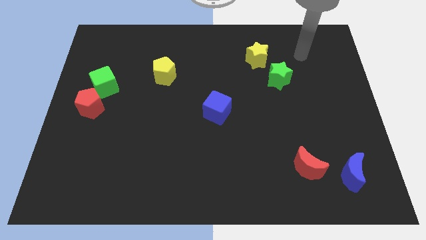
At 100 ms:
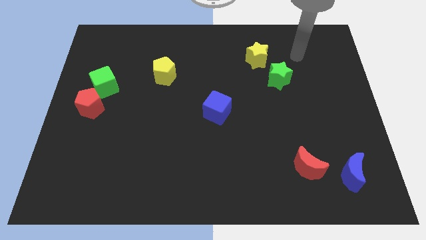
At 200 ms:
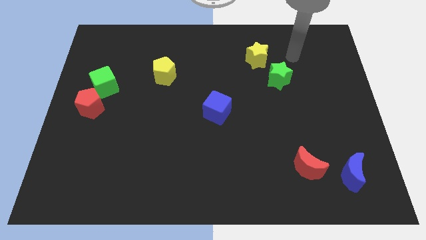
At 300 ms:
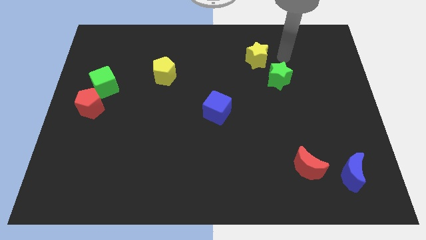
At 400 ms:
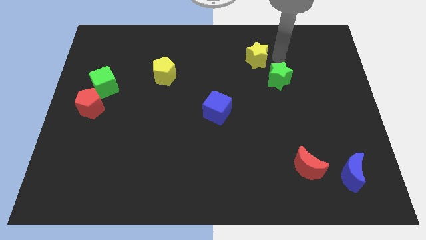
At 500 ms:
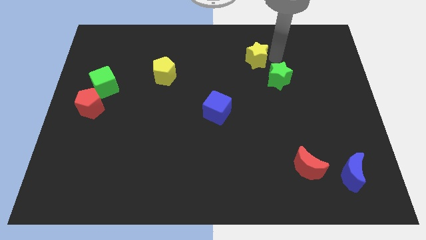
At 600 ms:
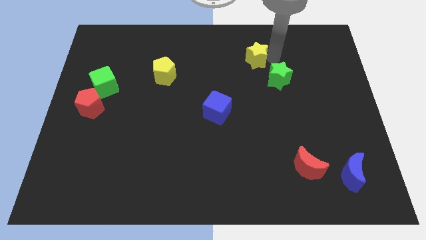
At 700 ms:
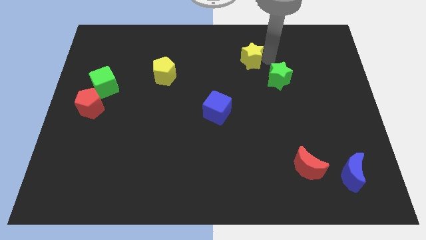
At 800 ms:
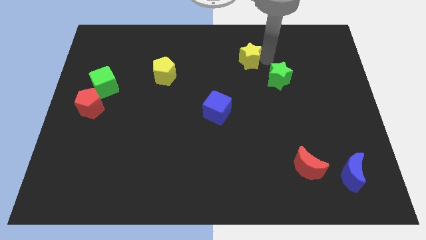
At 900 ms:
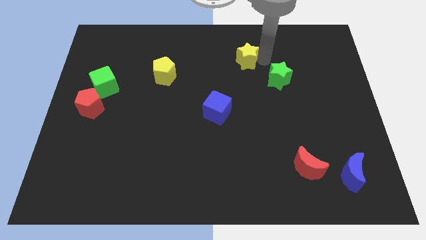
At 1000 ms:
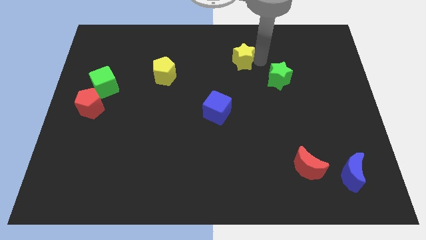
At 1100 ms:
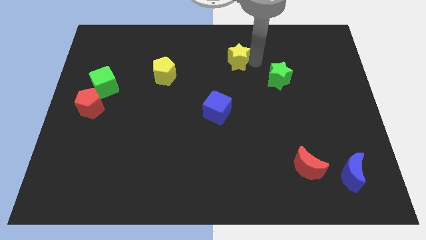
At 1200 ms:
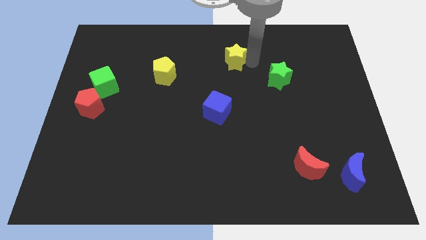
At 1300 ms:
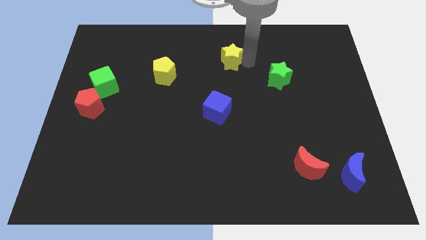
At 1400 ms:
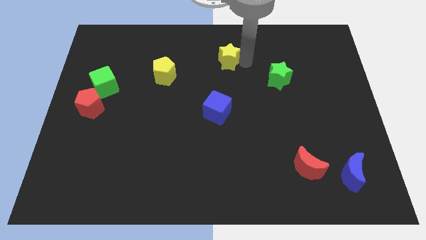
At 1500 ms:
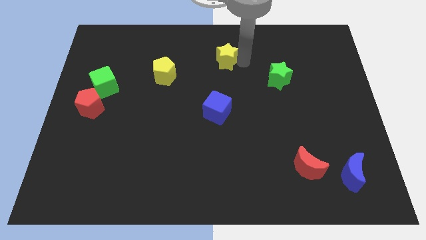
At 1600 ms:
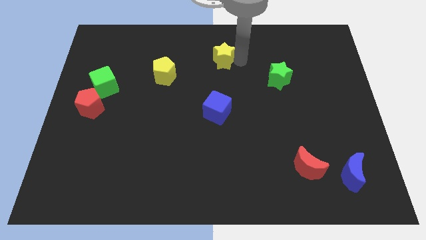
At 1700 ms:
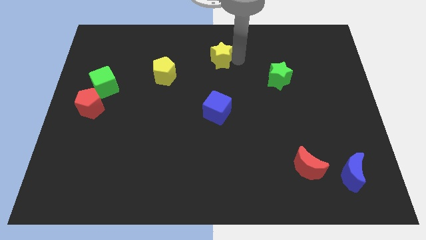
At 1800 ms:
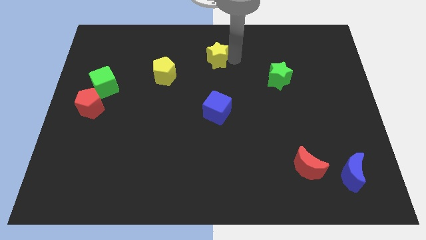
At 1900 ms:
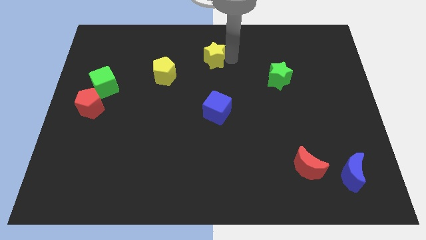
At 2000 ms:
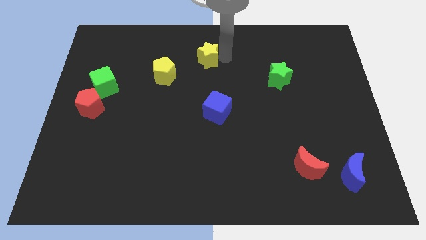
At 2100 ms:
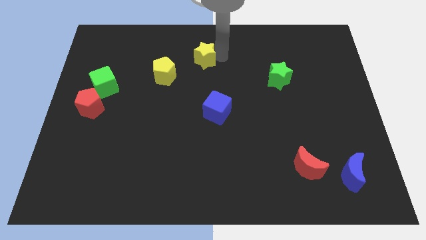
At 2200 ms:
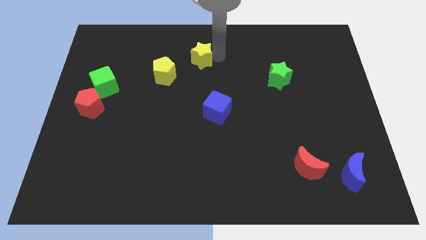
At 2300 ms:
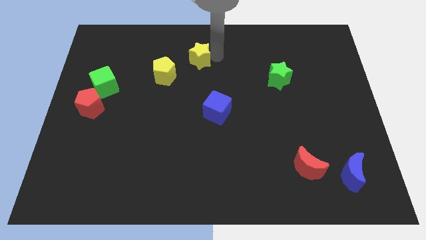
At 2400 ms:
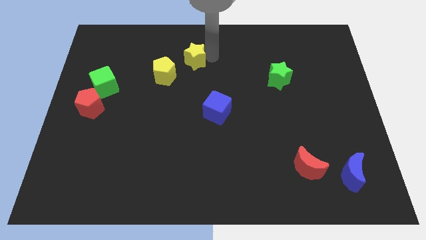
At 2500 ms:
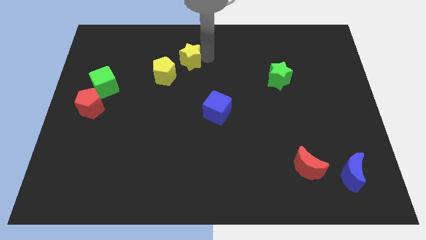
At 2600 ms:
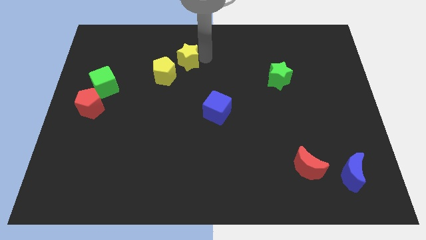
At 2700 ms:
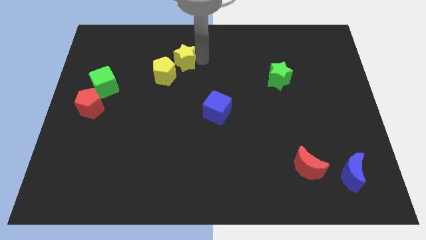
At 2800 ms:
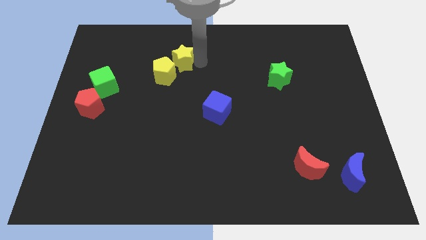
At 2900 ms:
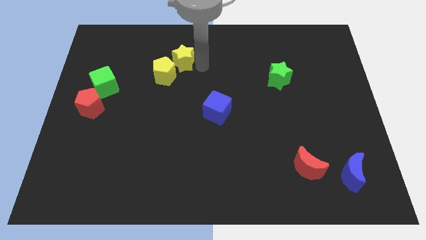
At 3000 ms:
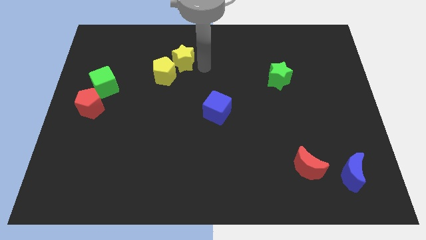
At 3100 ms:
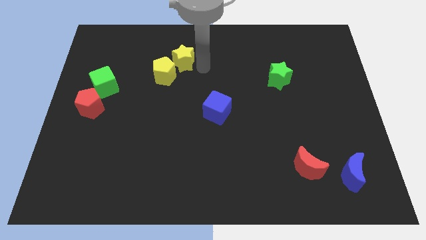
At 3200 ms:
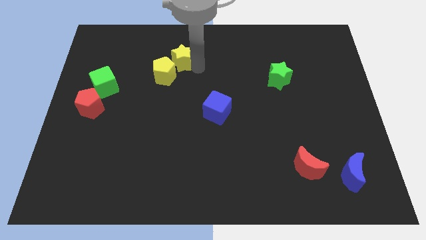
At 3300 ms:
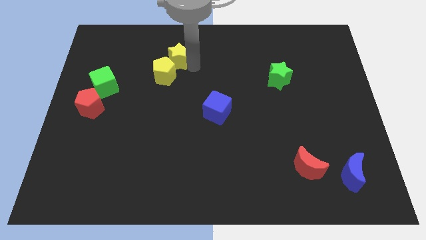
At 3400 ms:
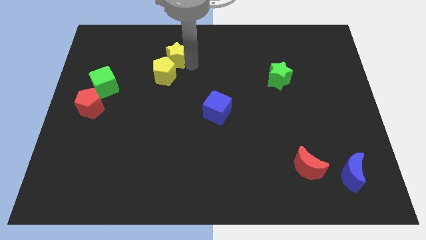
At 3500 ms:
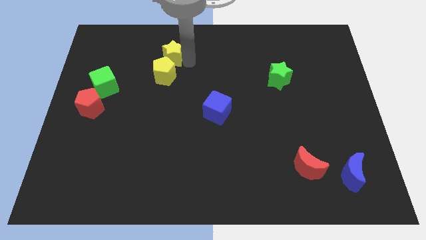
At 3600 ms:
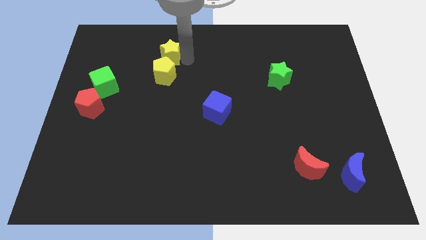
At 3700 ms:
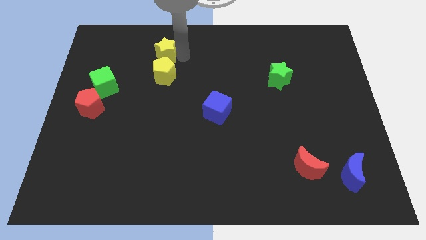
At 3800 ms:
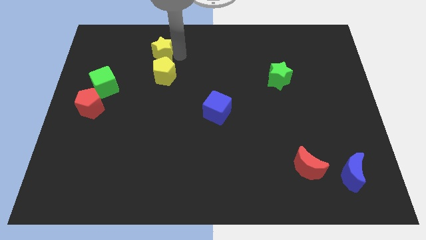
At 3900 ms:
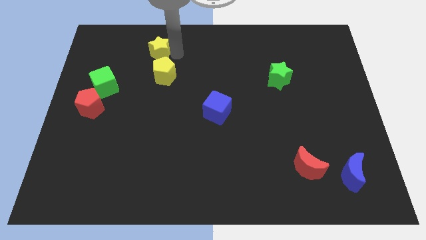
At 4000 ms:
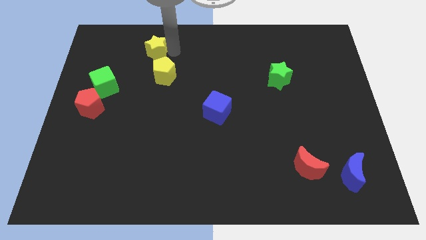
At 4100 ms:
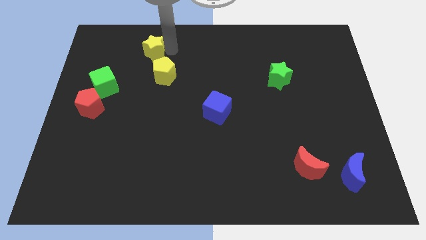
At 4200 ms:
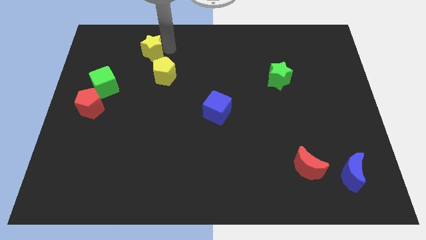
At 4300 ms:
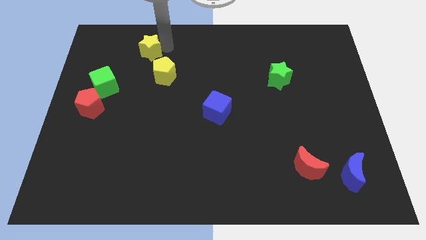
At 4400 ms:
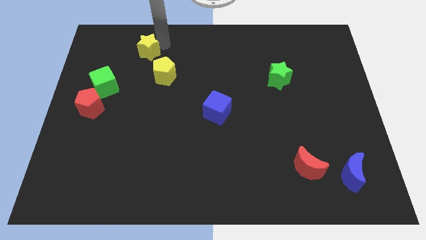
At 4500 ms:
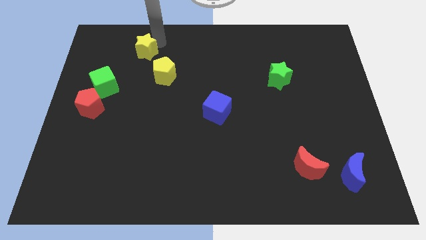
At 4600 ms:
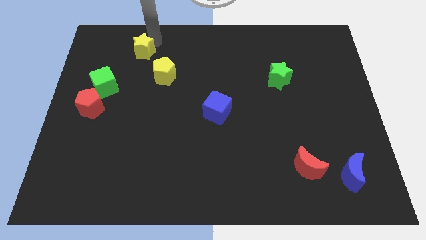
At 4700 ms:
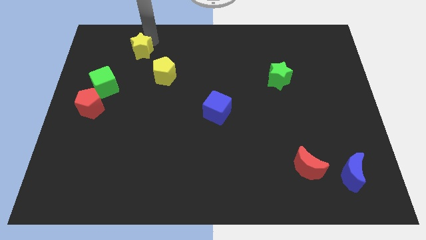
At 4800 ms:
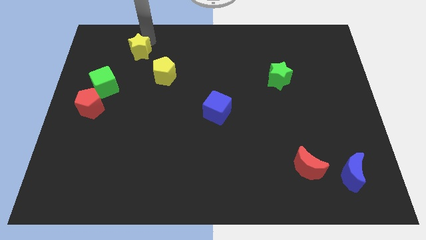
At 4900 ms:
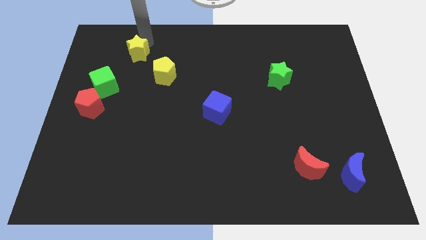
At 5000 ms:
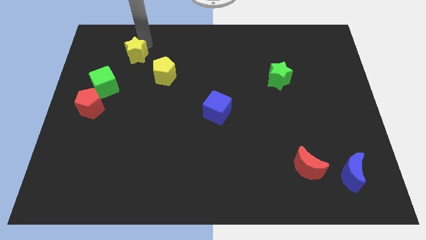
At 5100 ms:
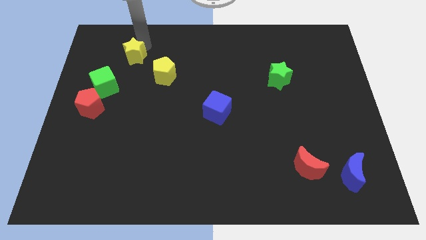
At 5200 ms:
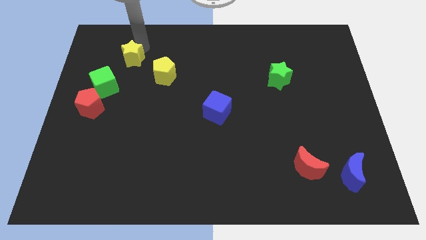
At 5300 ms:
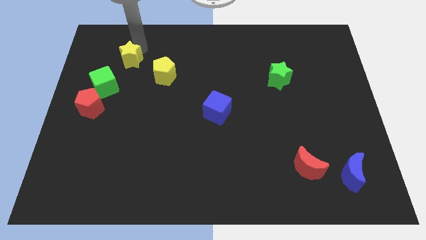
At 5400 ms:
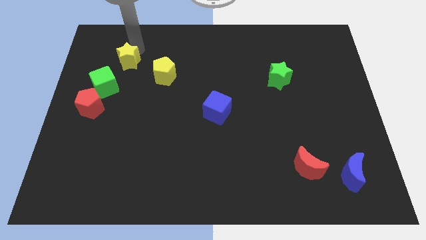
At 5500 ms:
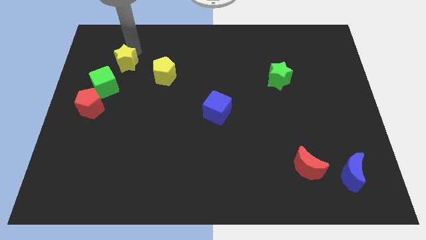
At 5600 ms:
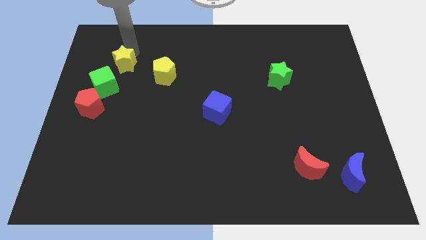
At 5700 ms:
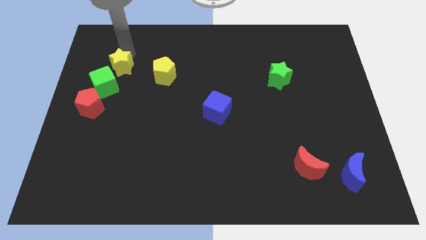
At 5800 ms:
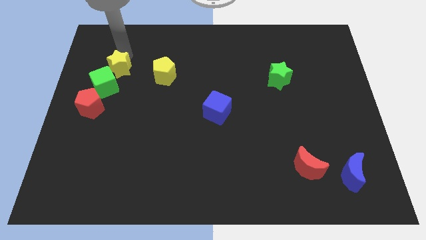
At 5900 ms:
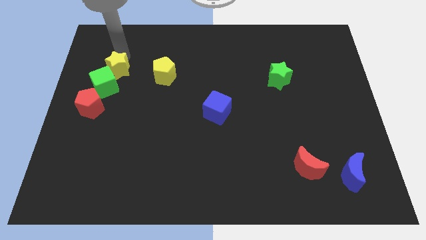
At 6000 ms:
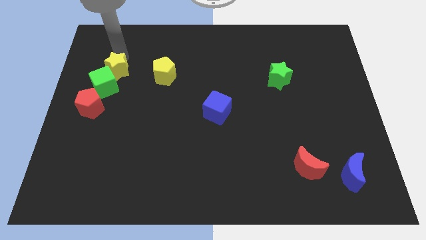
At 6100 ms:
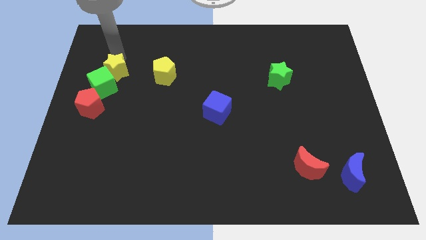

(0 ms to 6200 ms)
move the yellow star next to the green cube

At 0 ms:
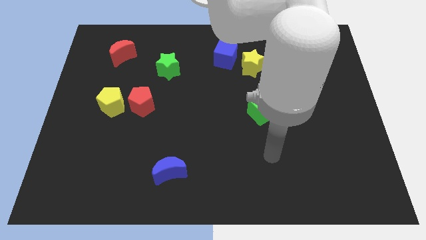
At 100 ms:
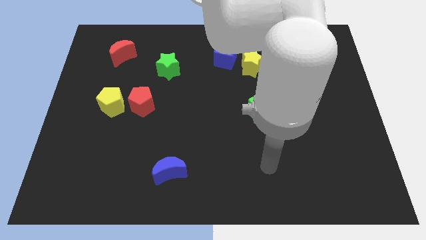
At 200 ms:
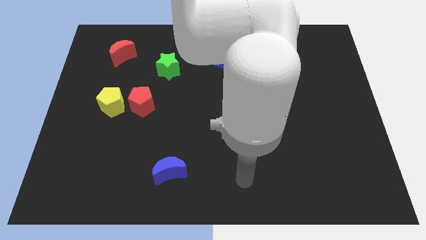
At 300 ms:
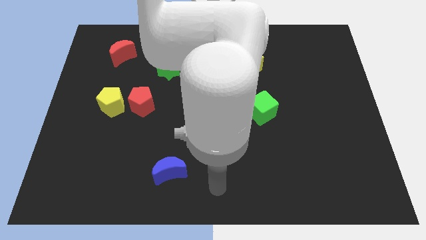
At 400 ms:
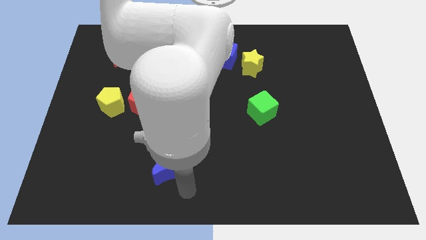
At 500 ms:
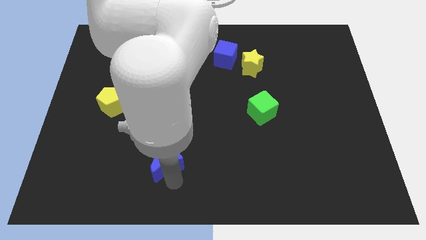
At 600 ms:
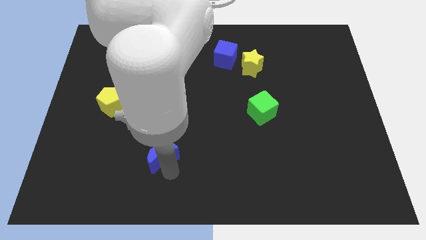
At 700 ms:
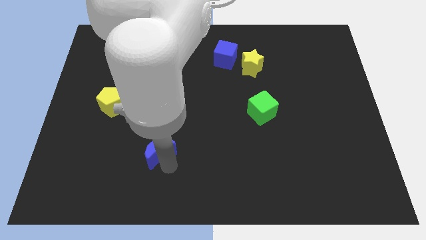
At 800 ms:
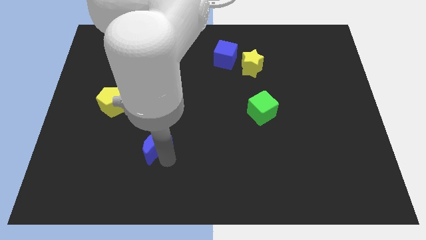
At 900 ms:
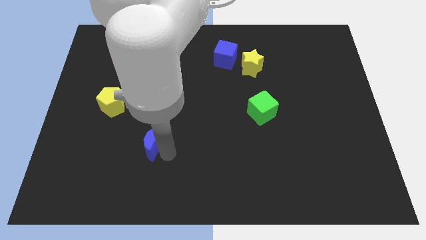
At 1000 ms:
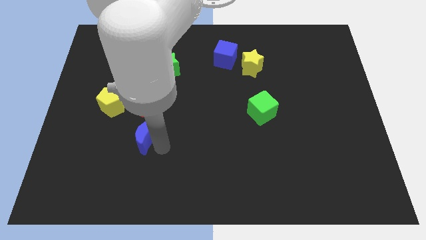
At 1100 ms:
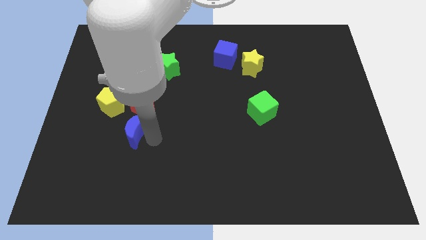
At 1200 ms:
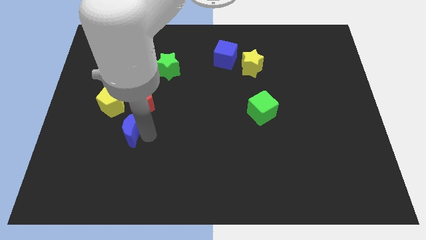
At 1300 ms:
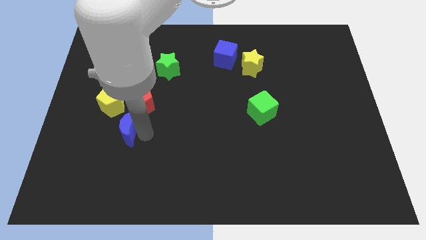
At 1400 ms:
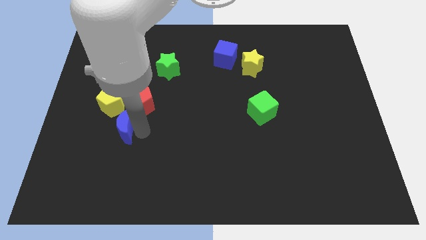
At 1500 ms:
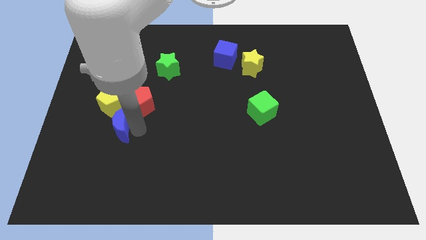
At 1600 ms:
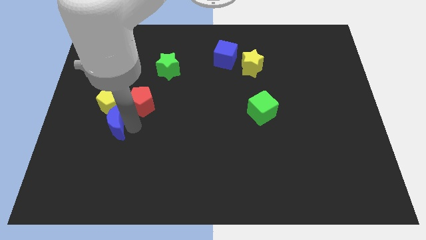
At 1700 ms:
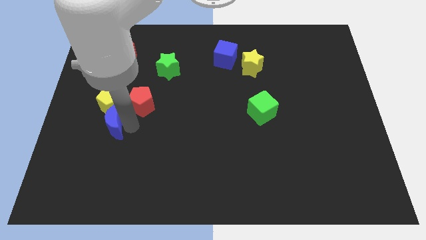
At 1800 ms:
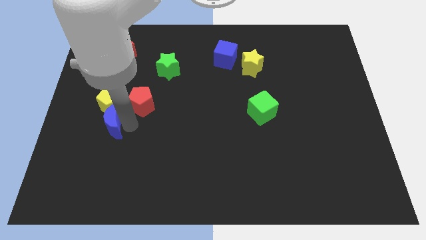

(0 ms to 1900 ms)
move the blue moon close to the yellow pentagon
